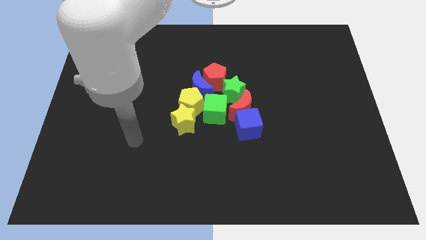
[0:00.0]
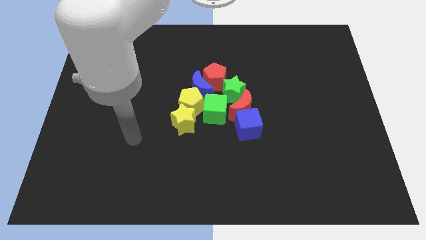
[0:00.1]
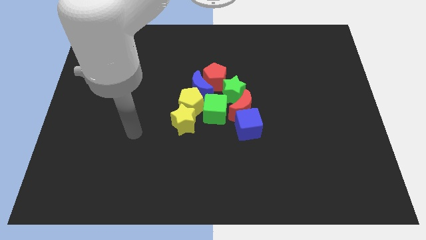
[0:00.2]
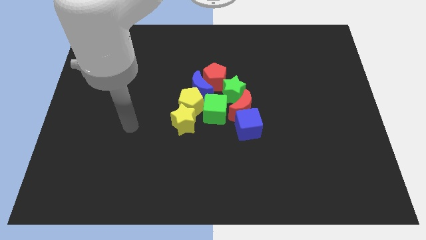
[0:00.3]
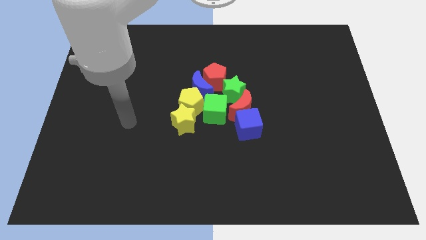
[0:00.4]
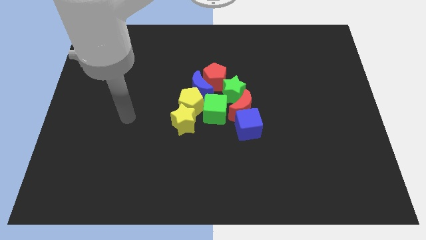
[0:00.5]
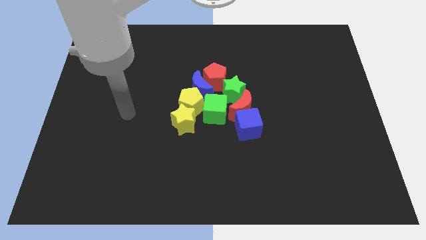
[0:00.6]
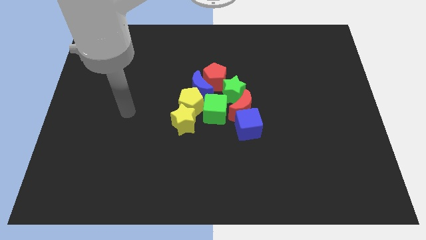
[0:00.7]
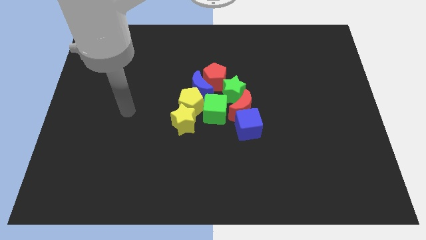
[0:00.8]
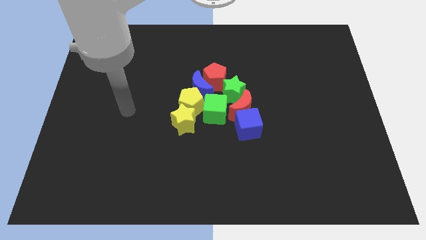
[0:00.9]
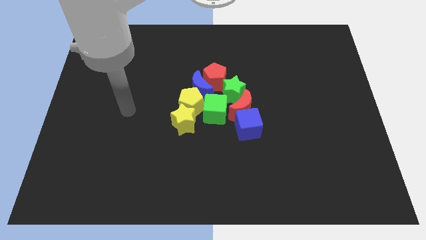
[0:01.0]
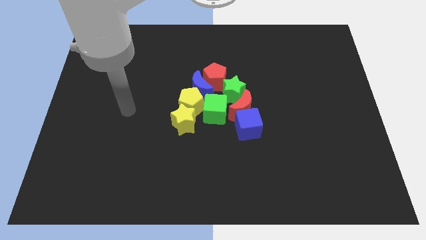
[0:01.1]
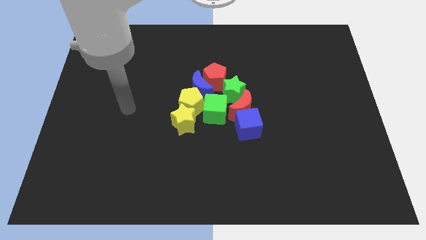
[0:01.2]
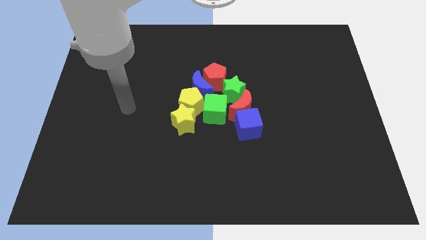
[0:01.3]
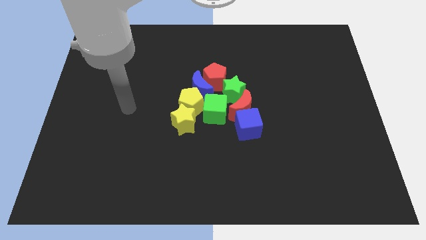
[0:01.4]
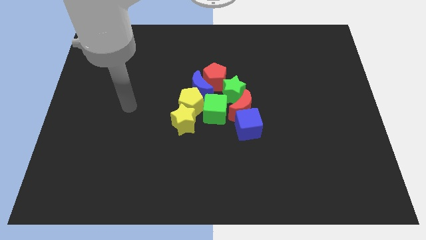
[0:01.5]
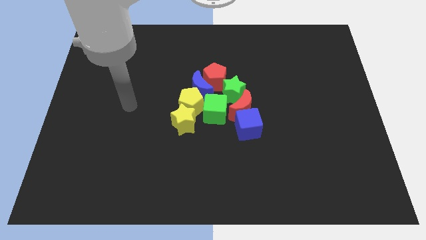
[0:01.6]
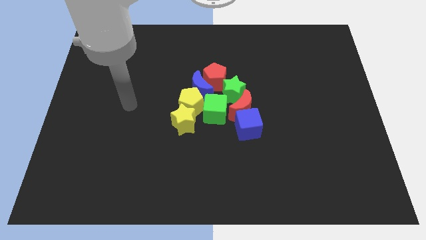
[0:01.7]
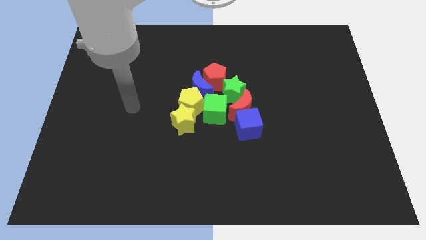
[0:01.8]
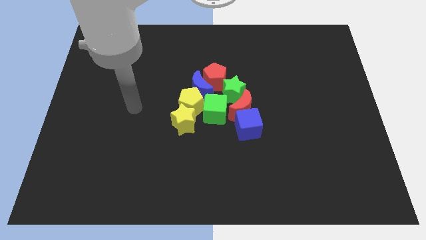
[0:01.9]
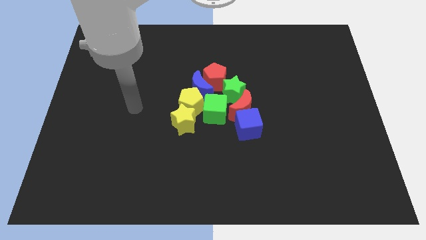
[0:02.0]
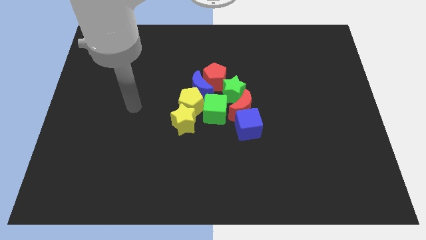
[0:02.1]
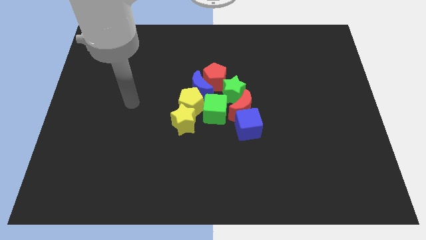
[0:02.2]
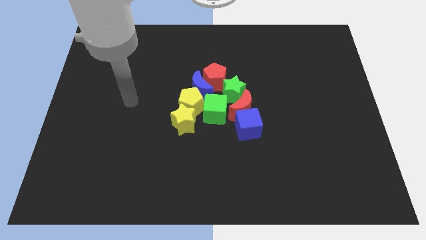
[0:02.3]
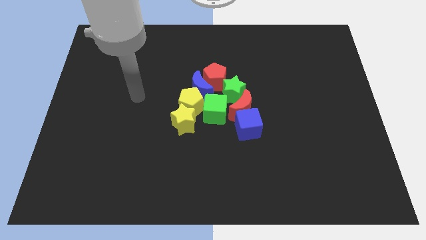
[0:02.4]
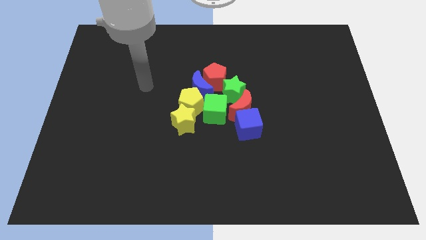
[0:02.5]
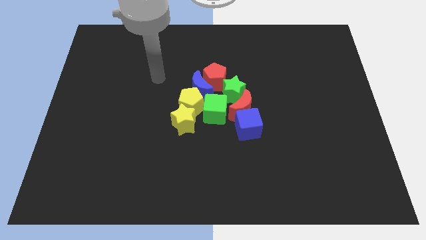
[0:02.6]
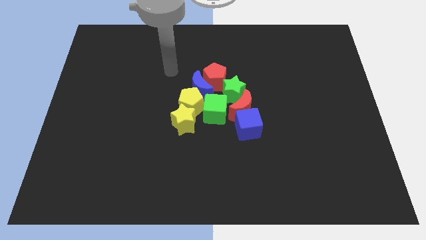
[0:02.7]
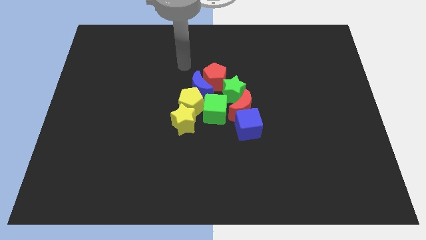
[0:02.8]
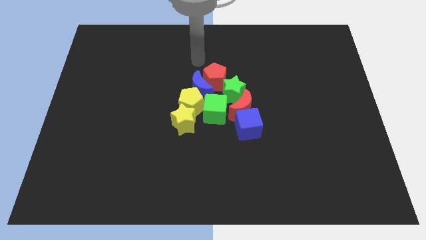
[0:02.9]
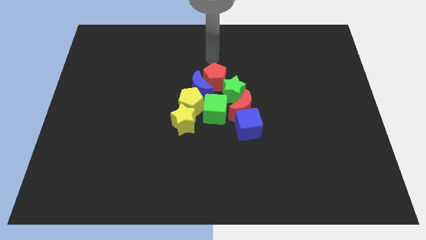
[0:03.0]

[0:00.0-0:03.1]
place your hand above the red pentagon

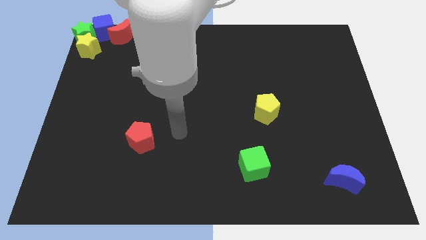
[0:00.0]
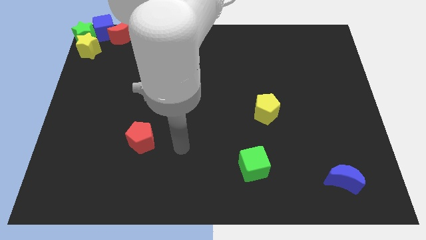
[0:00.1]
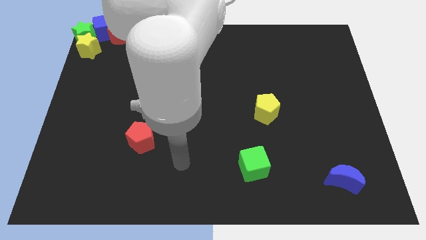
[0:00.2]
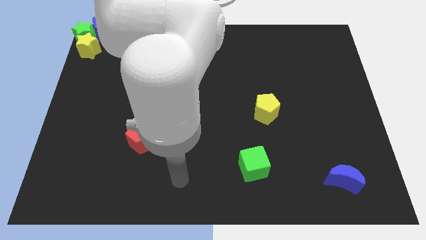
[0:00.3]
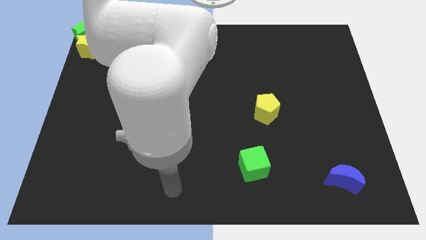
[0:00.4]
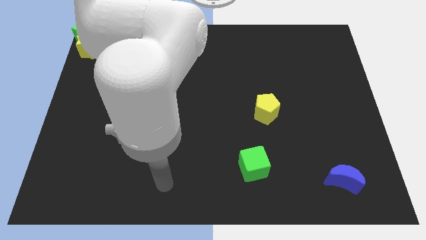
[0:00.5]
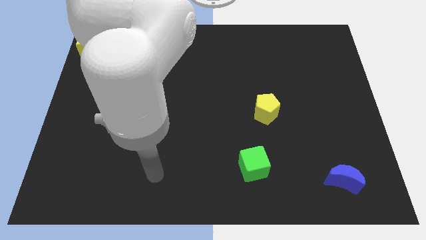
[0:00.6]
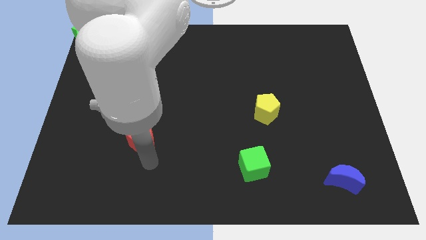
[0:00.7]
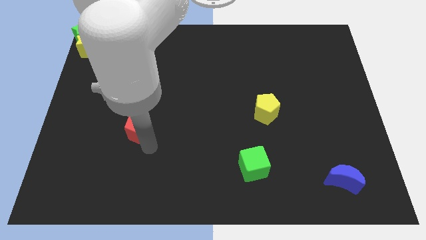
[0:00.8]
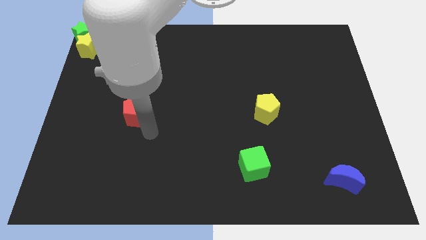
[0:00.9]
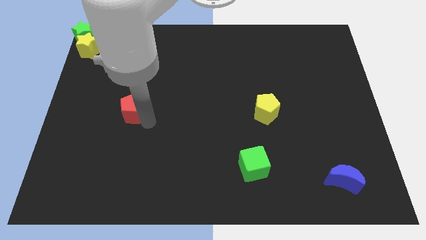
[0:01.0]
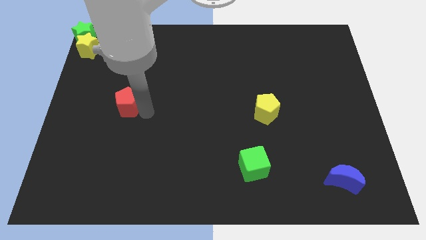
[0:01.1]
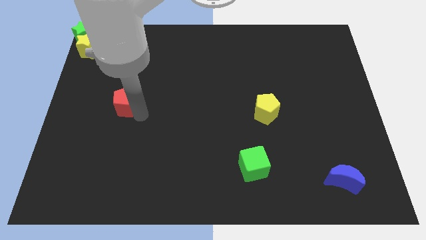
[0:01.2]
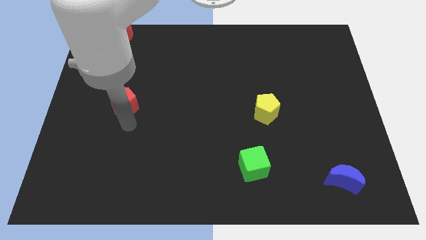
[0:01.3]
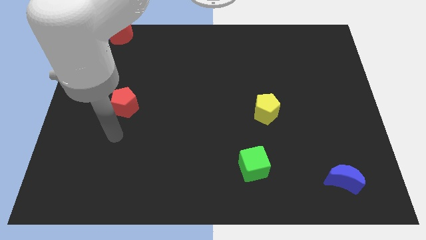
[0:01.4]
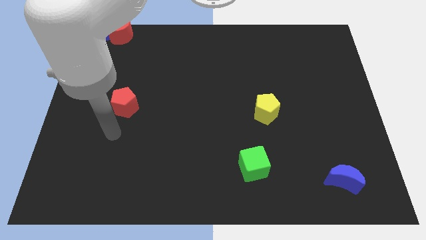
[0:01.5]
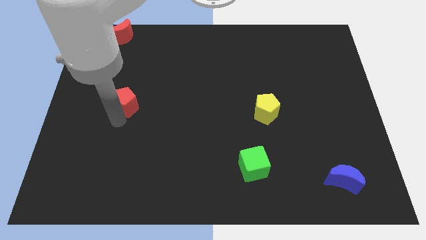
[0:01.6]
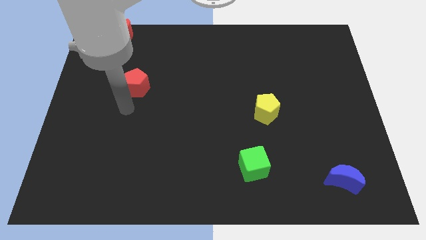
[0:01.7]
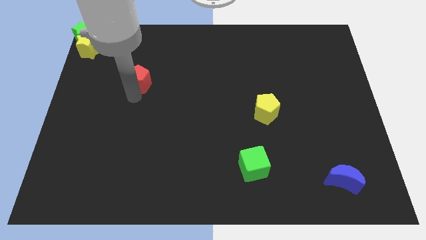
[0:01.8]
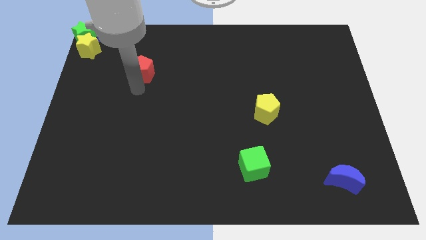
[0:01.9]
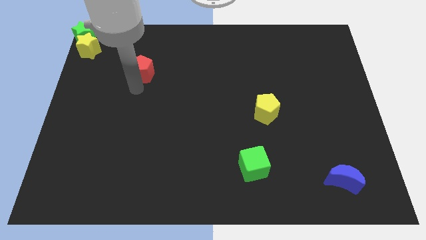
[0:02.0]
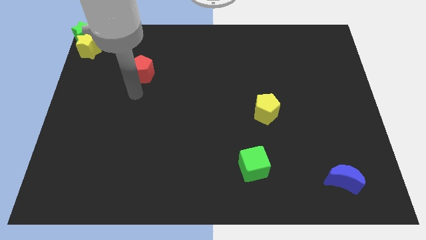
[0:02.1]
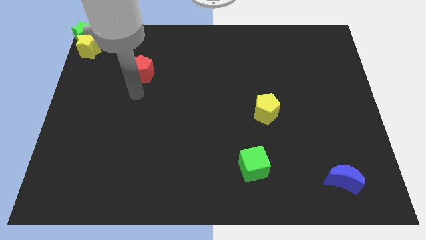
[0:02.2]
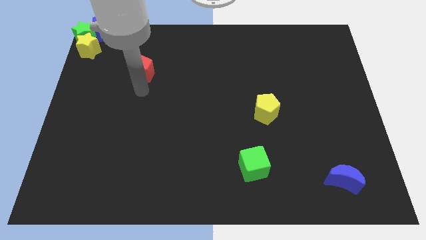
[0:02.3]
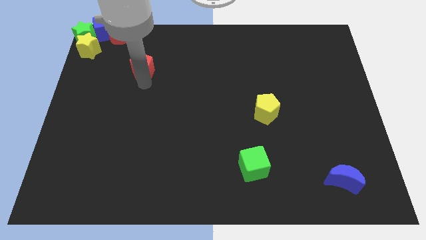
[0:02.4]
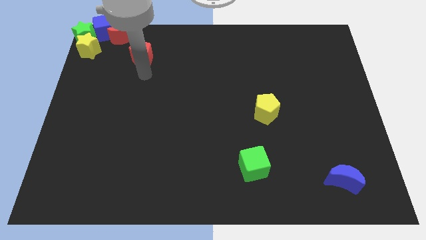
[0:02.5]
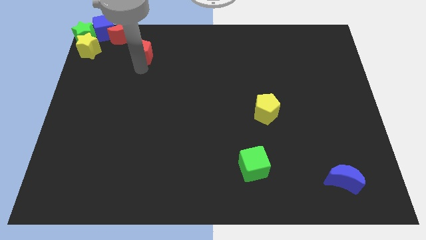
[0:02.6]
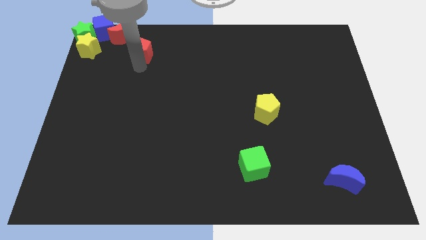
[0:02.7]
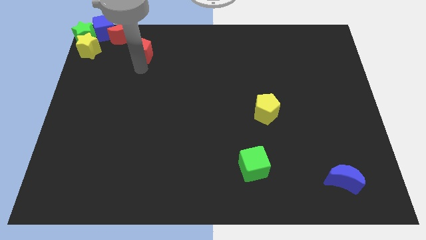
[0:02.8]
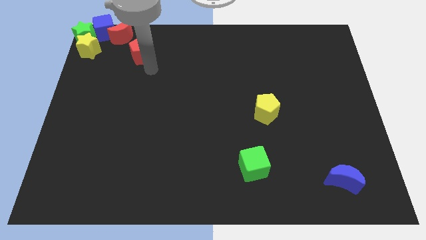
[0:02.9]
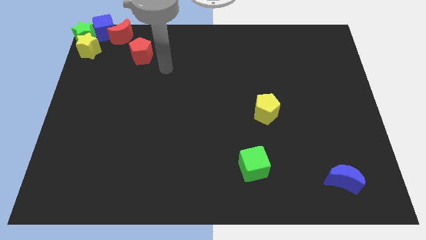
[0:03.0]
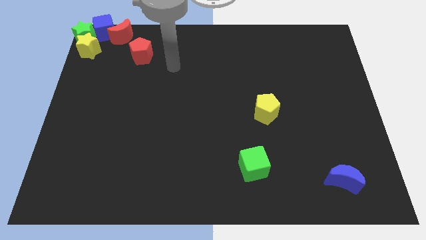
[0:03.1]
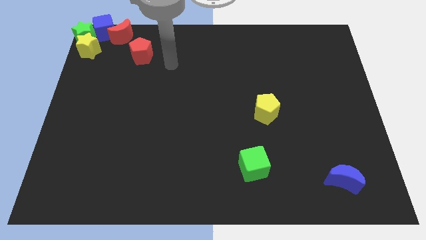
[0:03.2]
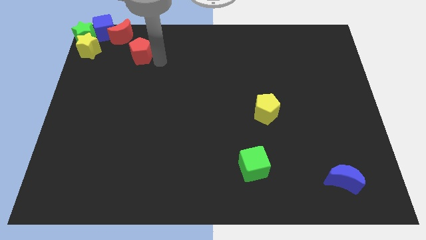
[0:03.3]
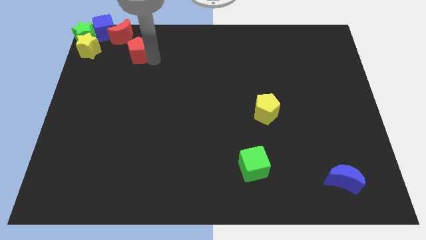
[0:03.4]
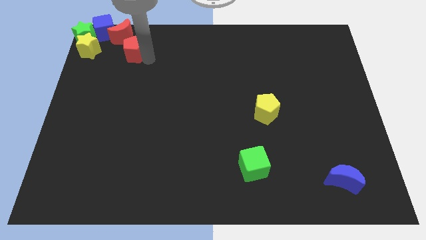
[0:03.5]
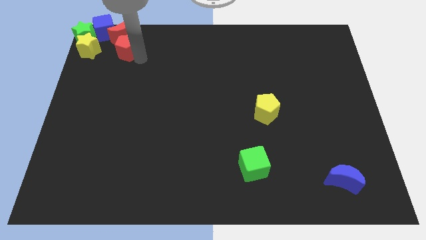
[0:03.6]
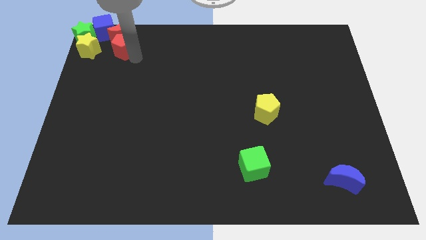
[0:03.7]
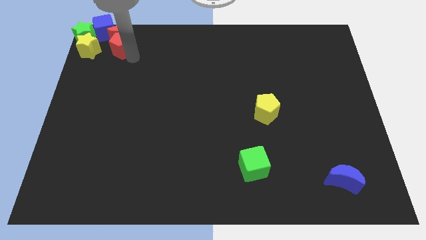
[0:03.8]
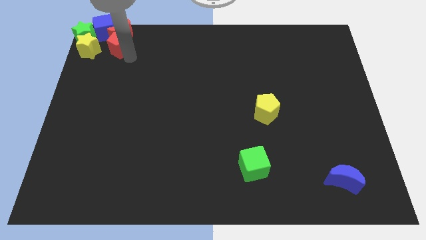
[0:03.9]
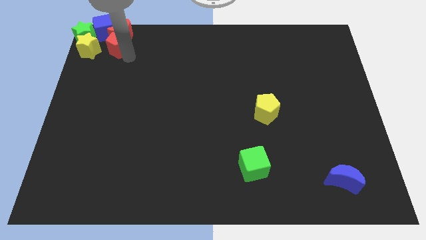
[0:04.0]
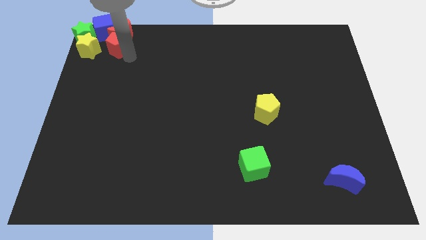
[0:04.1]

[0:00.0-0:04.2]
move the red pentagon to the bottom of the red crescent

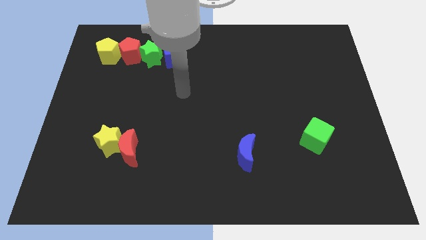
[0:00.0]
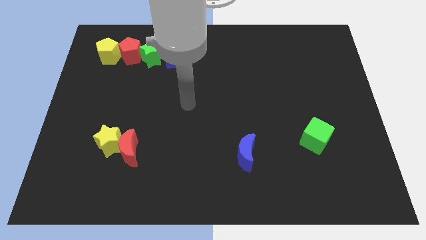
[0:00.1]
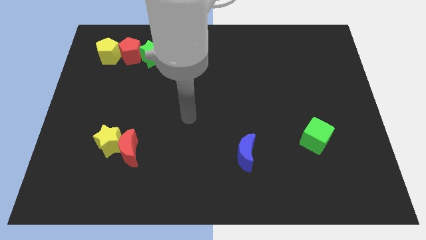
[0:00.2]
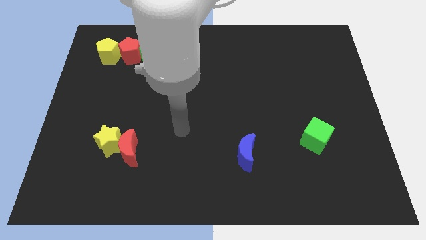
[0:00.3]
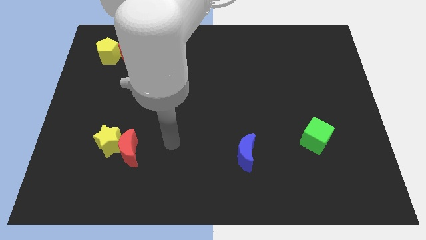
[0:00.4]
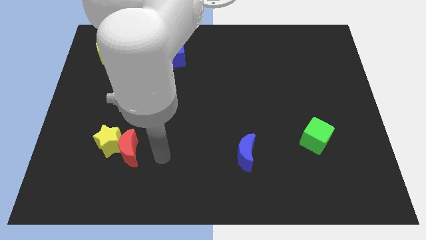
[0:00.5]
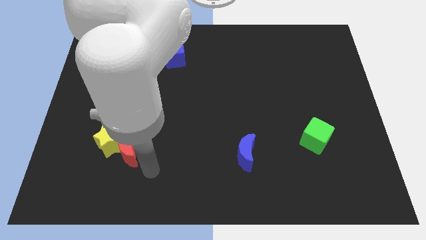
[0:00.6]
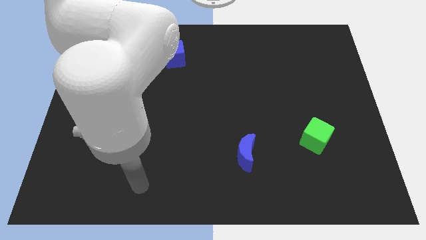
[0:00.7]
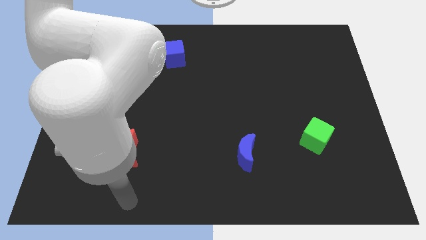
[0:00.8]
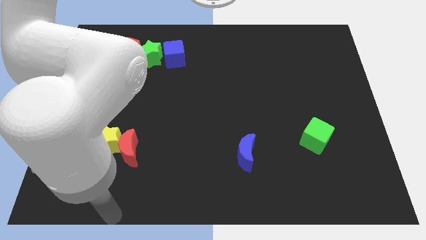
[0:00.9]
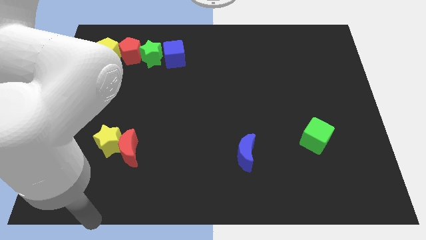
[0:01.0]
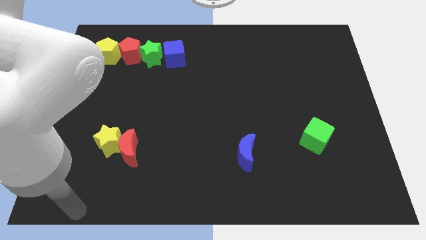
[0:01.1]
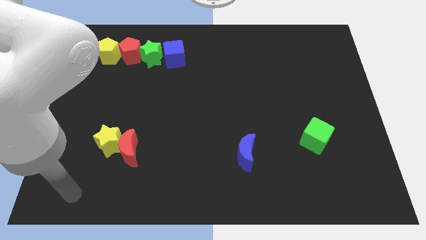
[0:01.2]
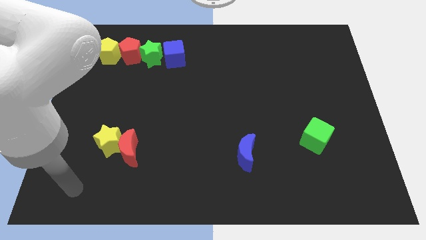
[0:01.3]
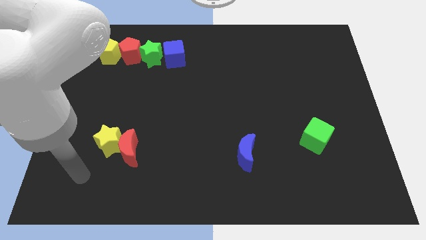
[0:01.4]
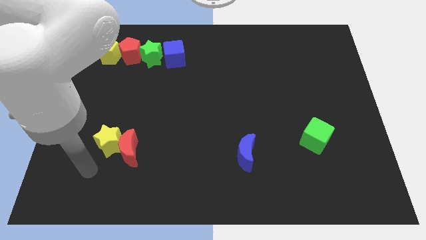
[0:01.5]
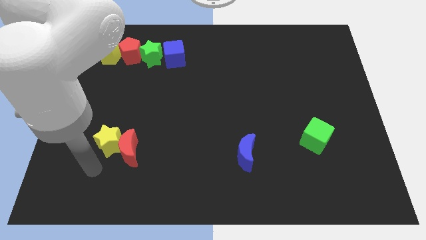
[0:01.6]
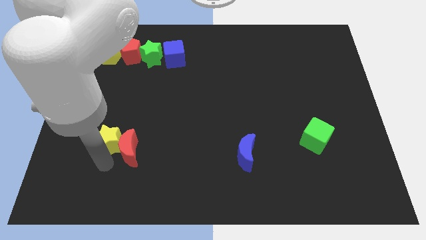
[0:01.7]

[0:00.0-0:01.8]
touch the bottom side of the yellow star
